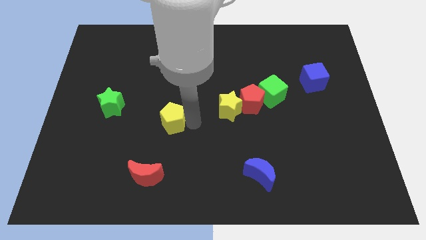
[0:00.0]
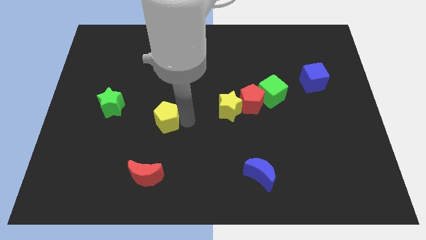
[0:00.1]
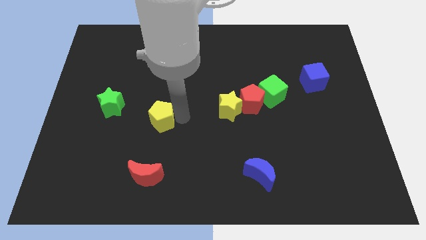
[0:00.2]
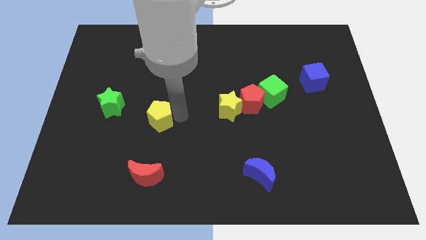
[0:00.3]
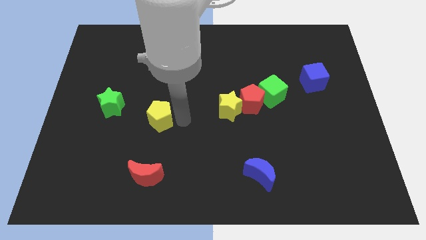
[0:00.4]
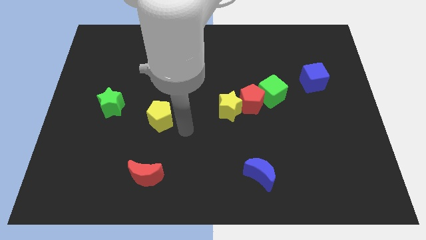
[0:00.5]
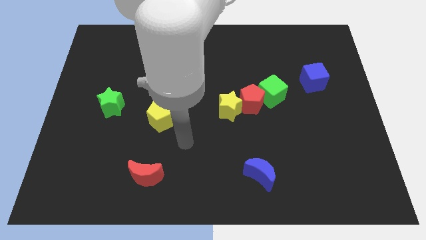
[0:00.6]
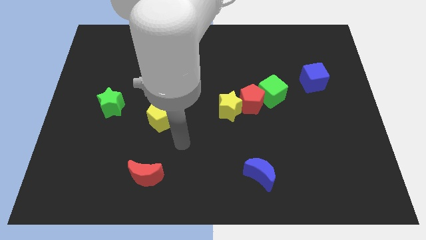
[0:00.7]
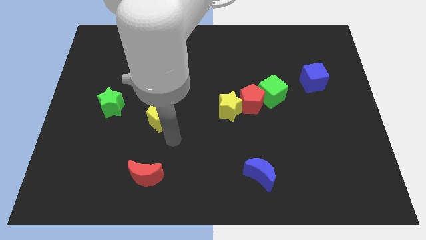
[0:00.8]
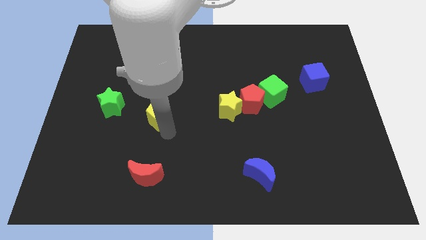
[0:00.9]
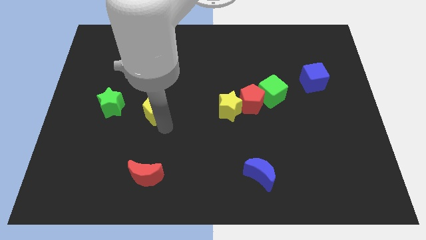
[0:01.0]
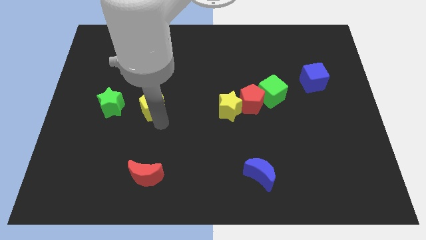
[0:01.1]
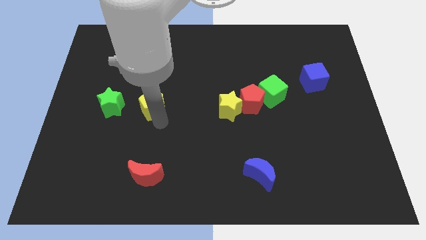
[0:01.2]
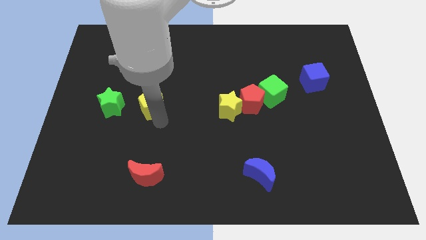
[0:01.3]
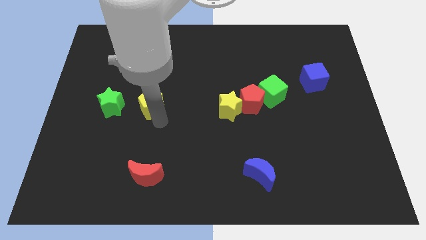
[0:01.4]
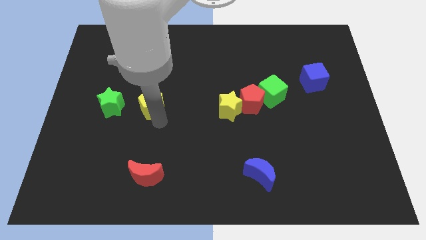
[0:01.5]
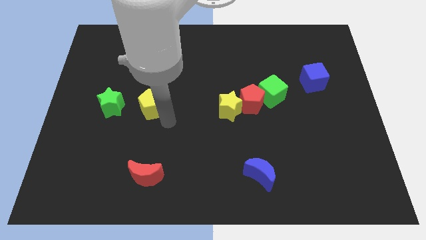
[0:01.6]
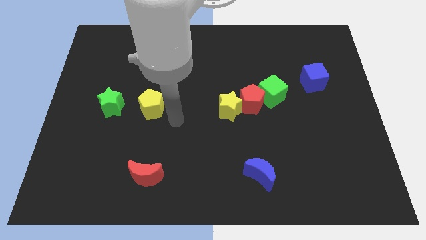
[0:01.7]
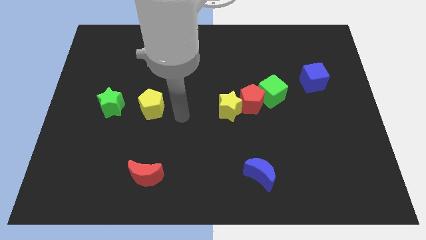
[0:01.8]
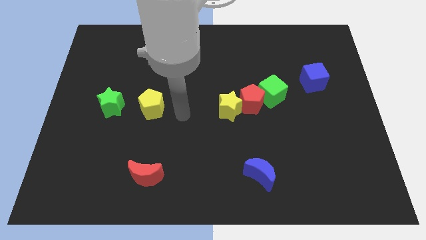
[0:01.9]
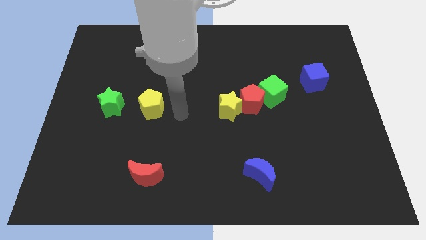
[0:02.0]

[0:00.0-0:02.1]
place yellow star adjacent to green star

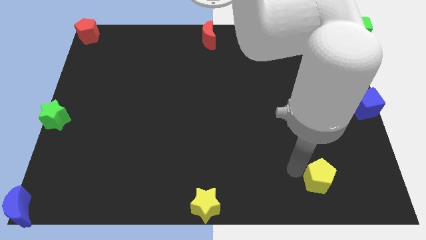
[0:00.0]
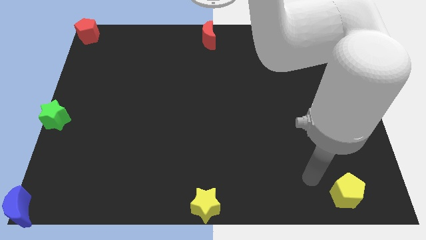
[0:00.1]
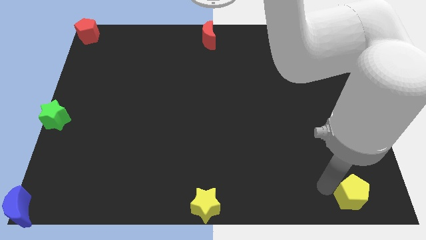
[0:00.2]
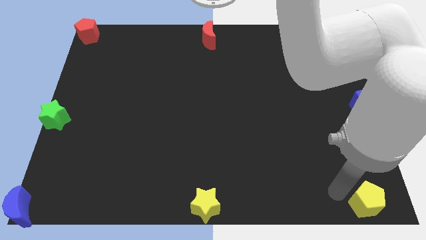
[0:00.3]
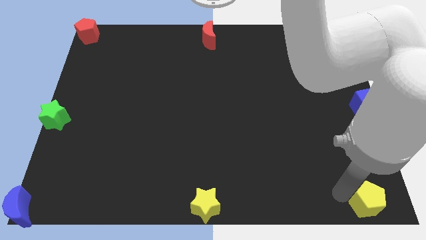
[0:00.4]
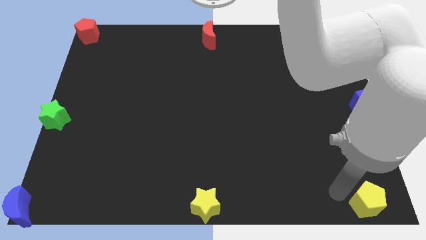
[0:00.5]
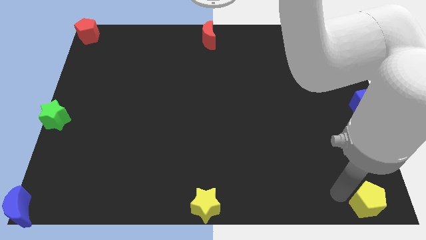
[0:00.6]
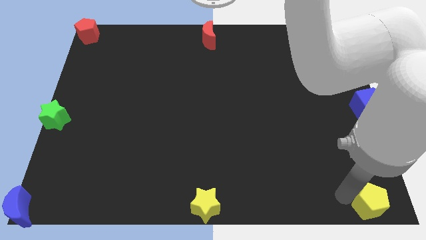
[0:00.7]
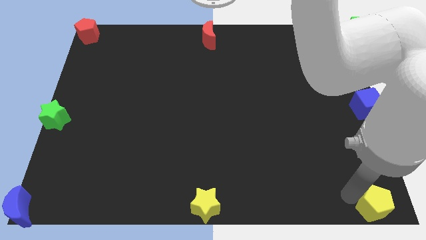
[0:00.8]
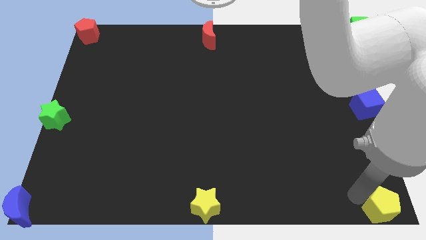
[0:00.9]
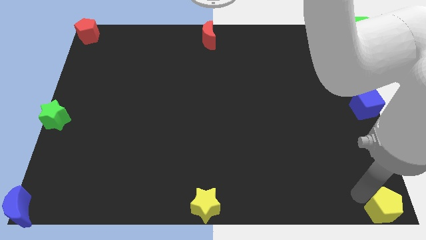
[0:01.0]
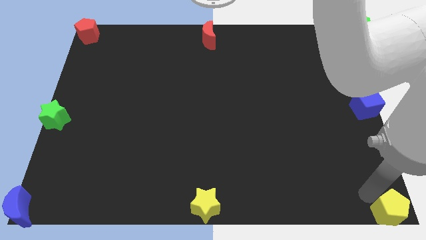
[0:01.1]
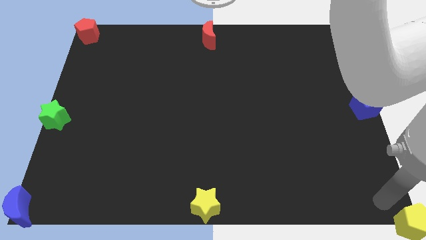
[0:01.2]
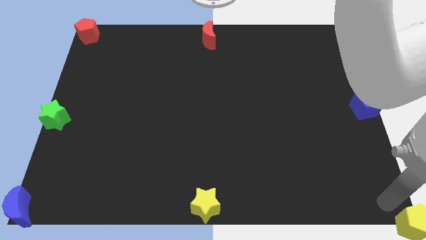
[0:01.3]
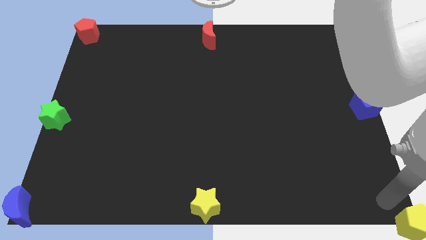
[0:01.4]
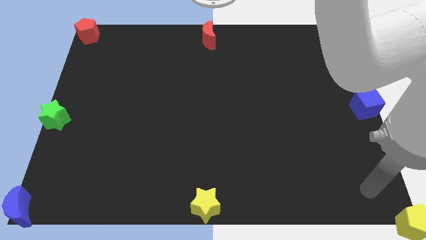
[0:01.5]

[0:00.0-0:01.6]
push the yellow pentagon to the bottom right corner

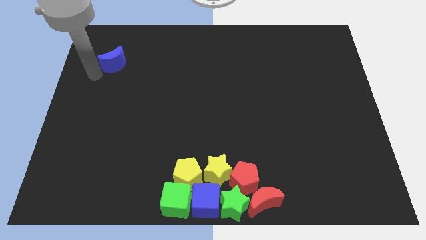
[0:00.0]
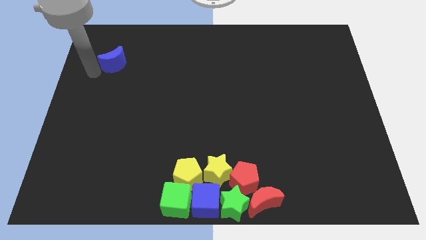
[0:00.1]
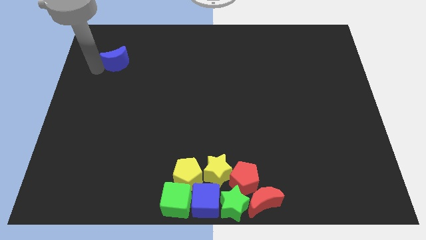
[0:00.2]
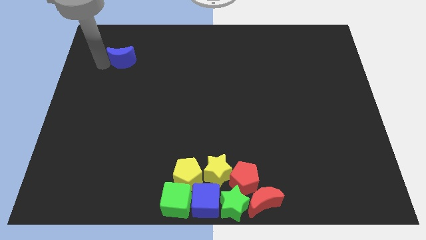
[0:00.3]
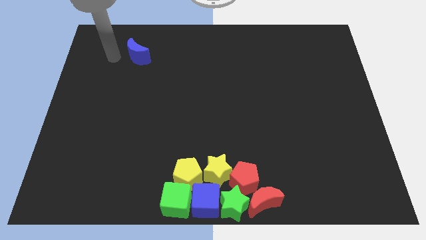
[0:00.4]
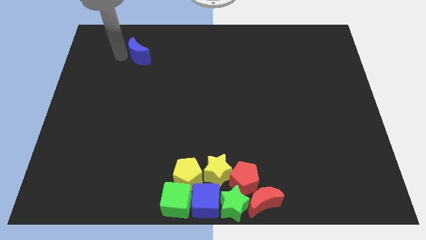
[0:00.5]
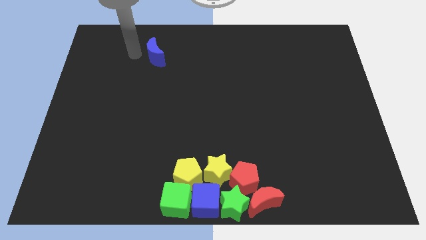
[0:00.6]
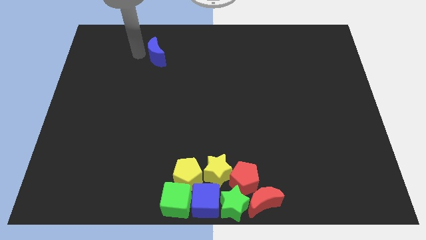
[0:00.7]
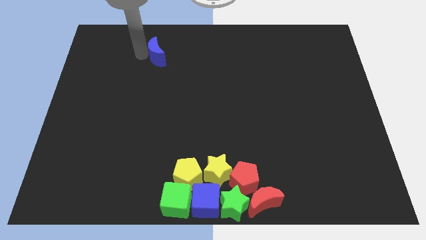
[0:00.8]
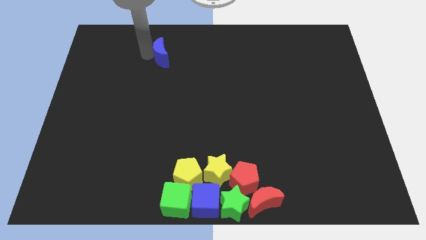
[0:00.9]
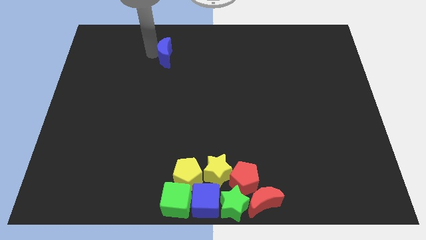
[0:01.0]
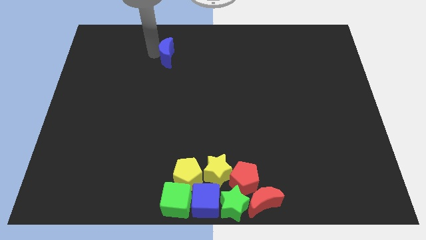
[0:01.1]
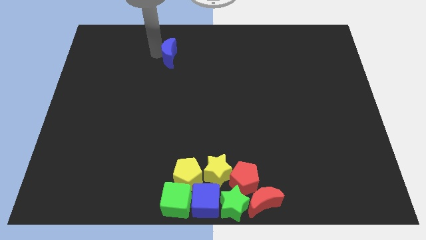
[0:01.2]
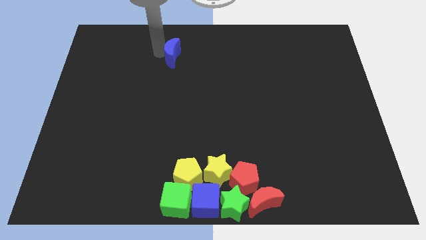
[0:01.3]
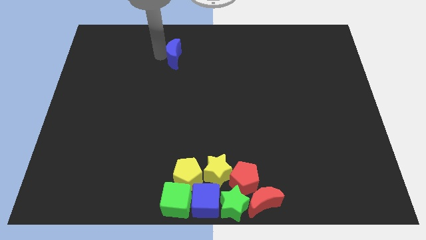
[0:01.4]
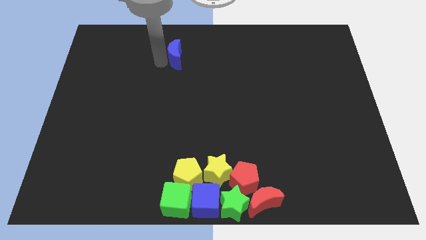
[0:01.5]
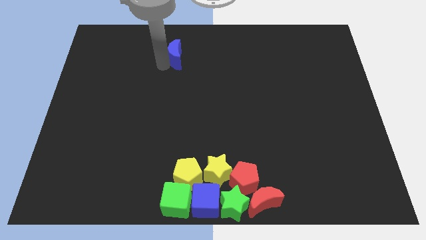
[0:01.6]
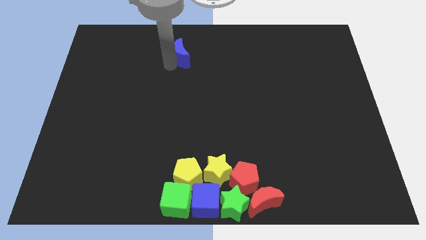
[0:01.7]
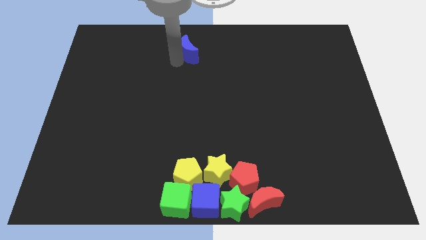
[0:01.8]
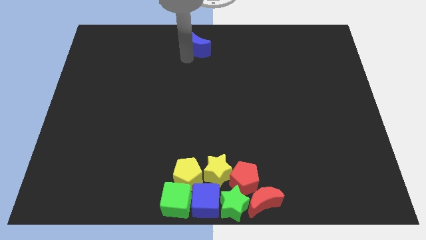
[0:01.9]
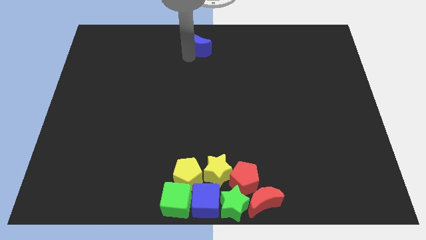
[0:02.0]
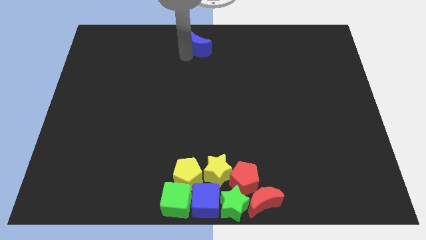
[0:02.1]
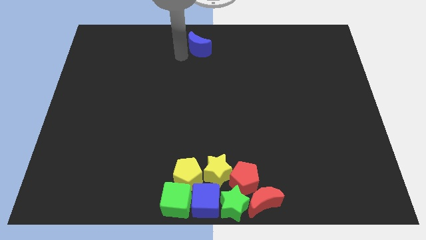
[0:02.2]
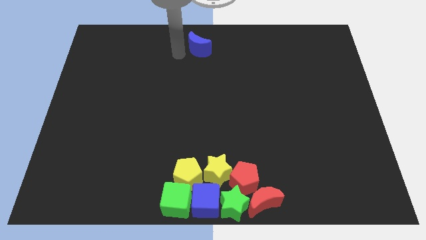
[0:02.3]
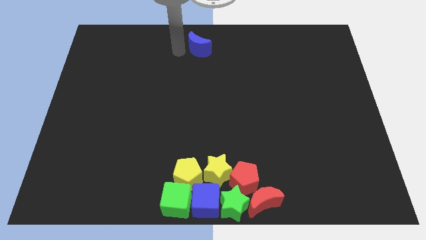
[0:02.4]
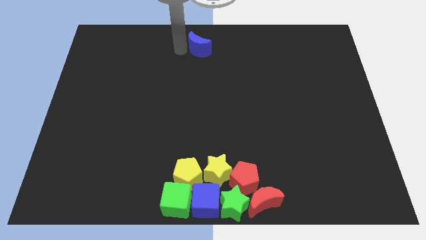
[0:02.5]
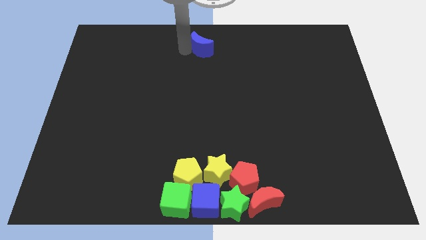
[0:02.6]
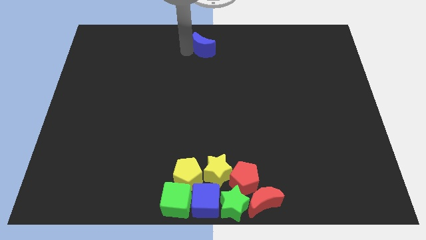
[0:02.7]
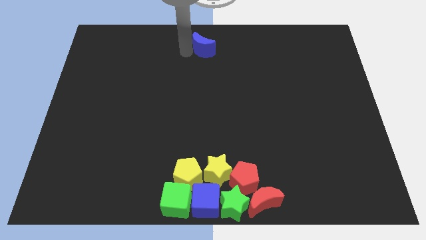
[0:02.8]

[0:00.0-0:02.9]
push the blue moon towards the top center

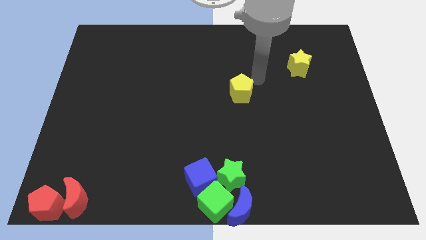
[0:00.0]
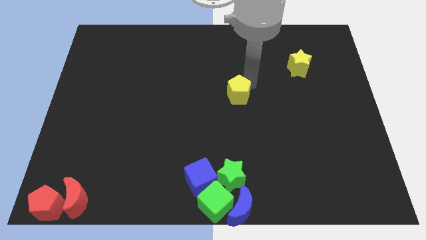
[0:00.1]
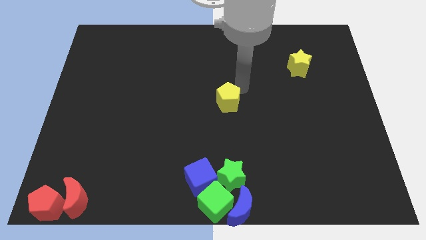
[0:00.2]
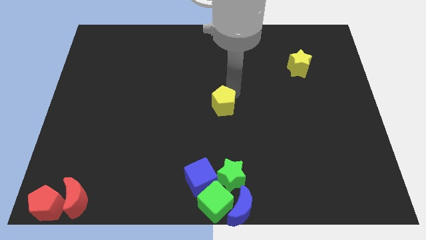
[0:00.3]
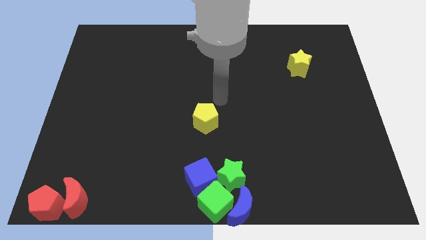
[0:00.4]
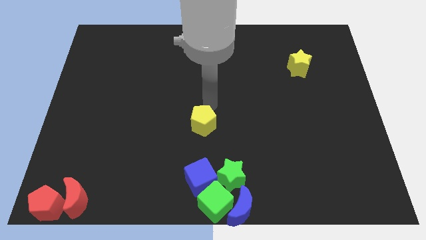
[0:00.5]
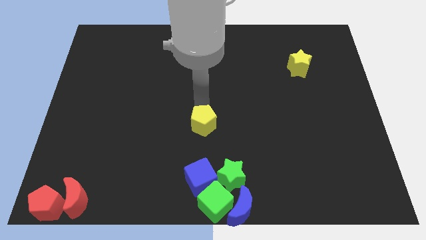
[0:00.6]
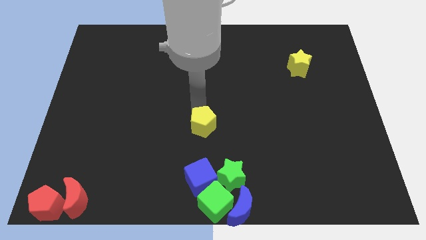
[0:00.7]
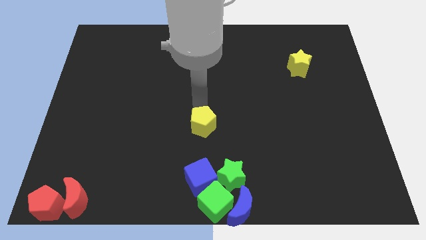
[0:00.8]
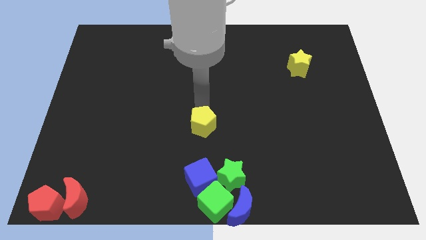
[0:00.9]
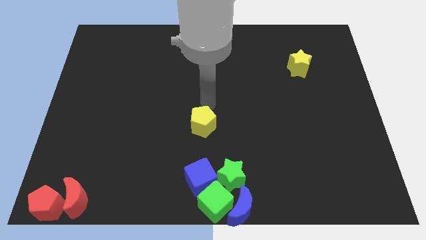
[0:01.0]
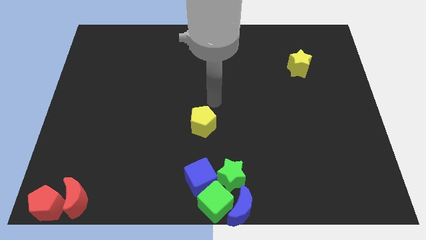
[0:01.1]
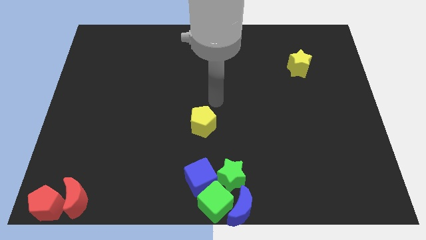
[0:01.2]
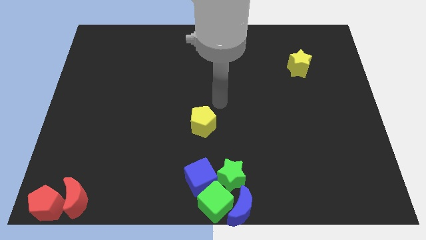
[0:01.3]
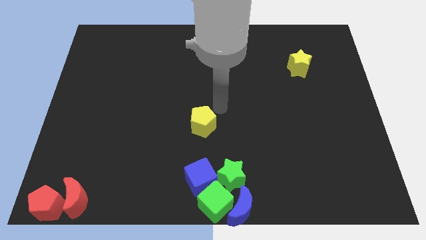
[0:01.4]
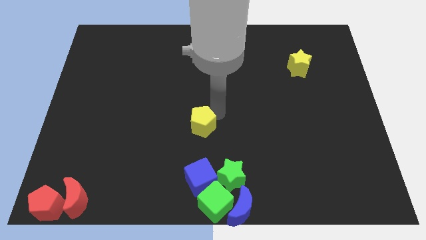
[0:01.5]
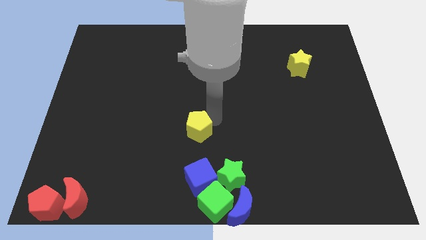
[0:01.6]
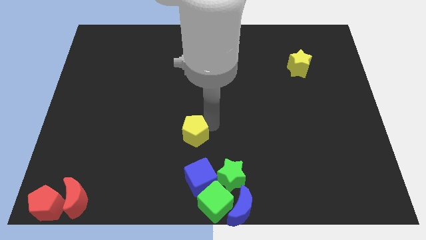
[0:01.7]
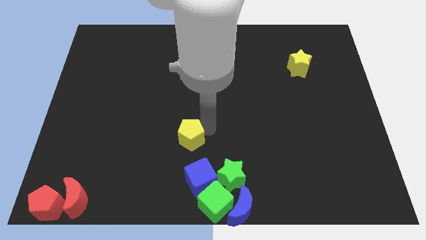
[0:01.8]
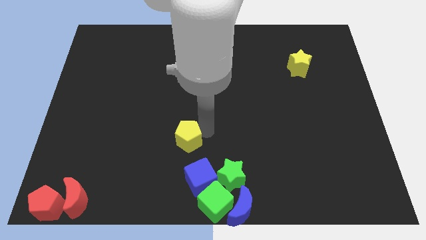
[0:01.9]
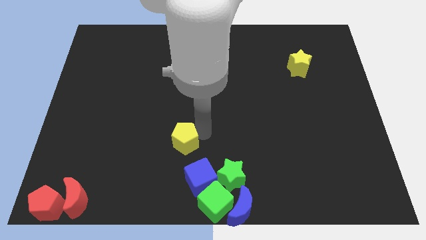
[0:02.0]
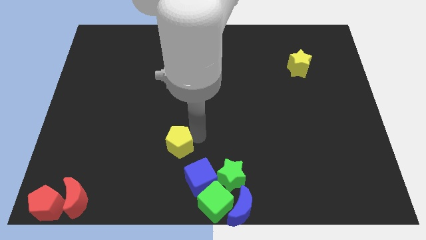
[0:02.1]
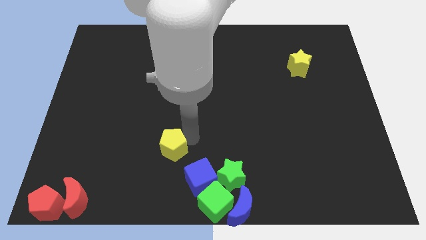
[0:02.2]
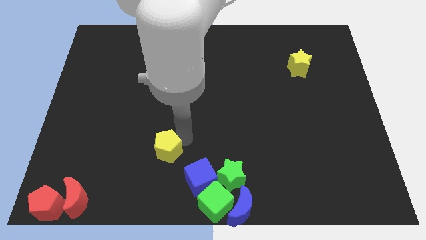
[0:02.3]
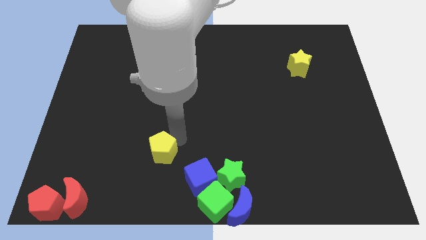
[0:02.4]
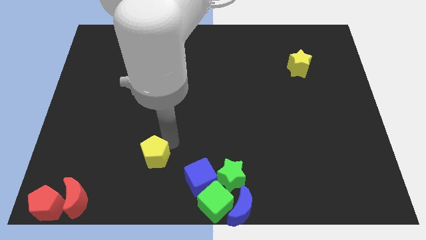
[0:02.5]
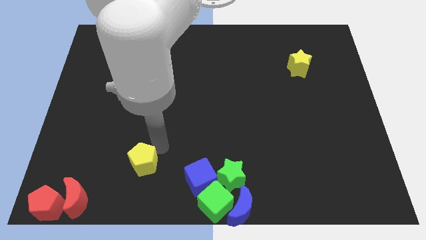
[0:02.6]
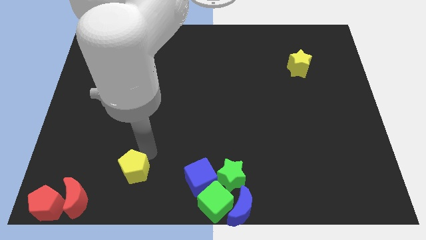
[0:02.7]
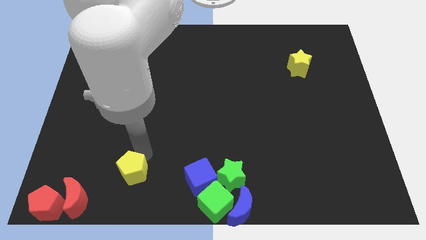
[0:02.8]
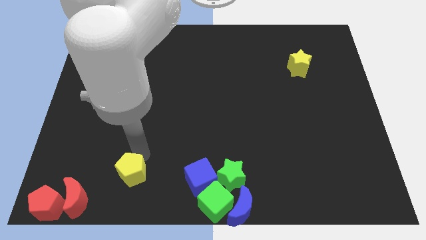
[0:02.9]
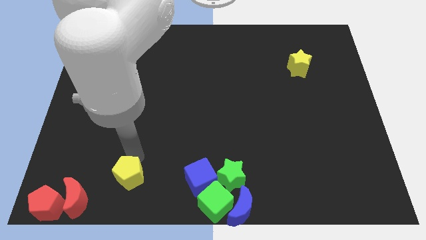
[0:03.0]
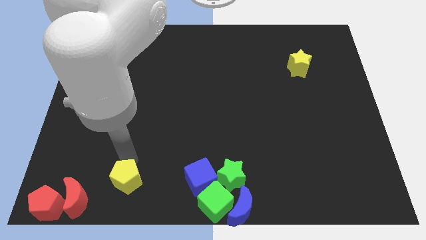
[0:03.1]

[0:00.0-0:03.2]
push yellow pentagon to the left of blue cube
